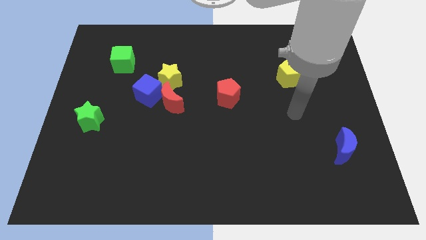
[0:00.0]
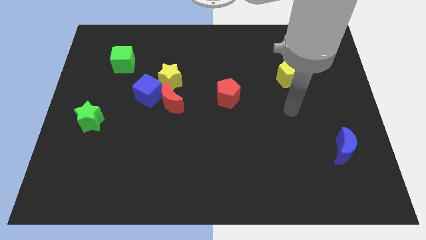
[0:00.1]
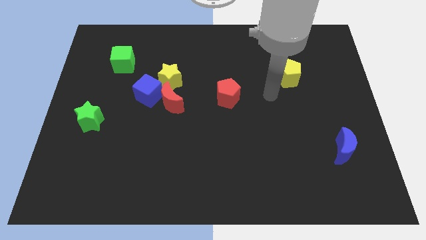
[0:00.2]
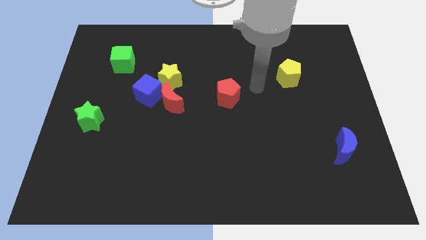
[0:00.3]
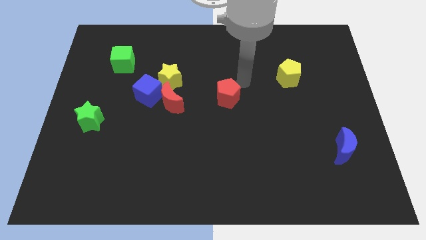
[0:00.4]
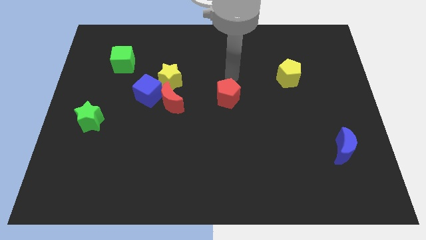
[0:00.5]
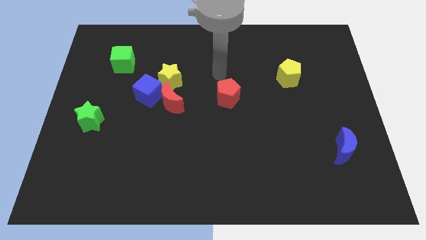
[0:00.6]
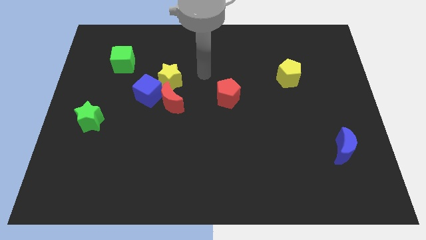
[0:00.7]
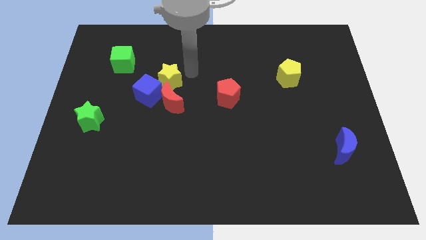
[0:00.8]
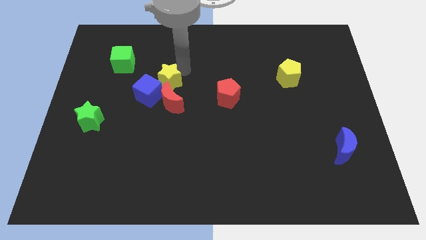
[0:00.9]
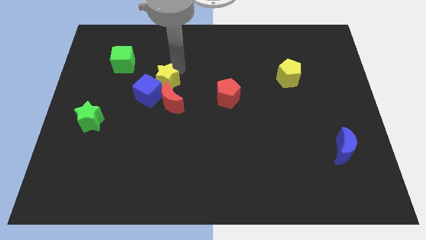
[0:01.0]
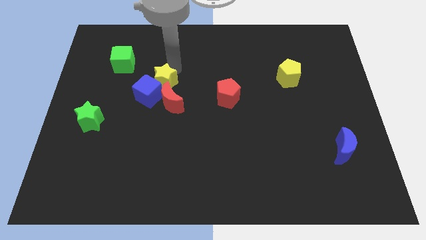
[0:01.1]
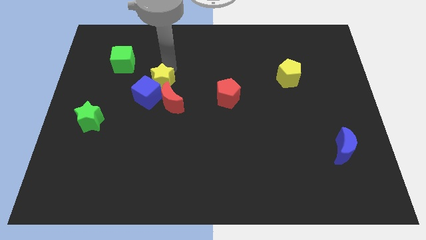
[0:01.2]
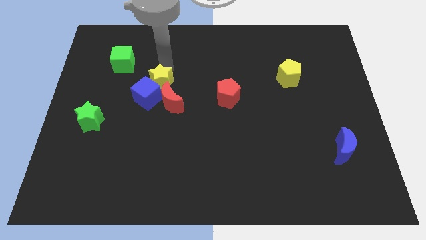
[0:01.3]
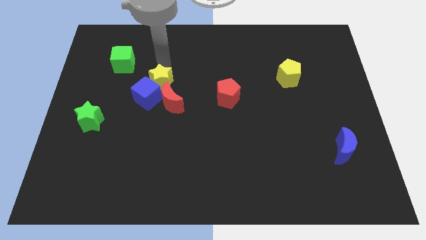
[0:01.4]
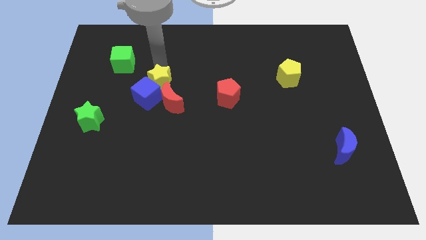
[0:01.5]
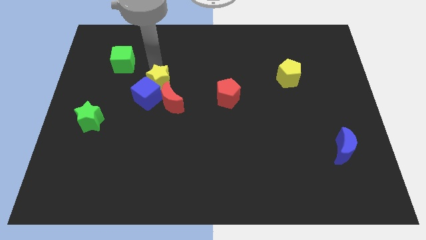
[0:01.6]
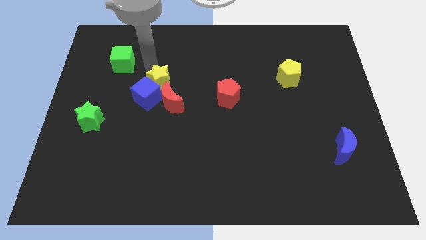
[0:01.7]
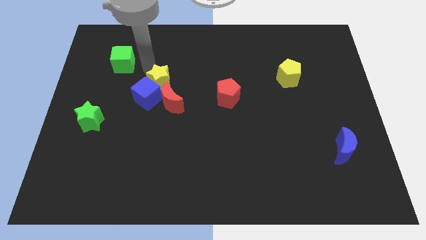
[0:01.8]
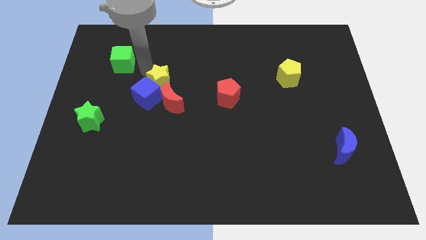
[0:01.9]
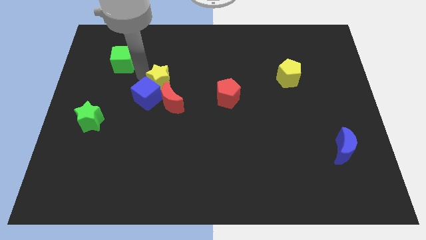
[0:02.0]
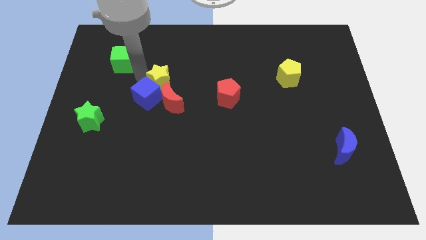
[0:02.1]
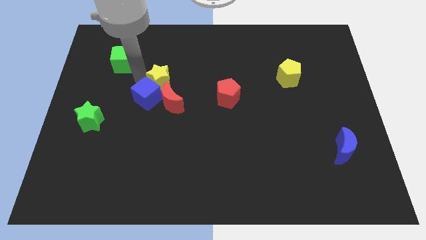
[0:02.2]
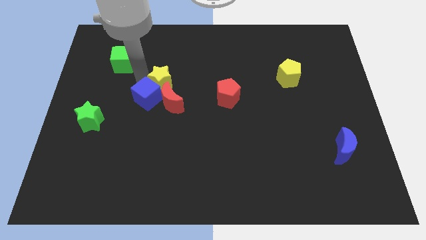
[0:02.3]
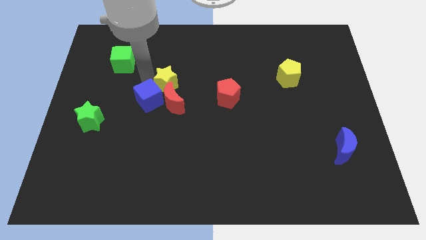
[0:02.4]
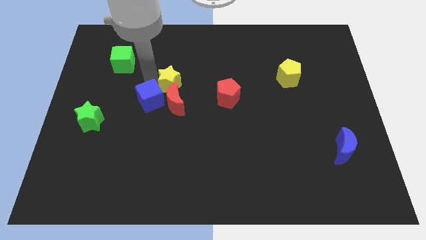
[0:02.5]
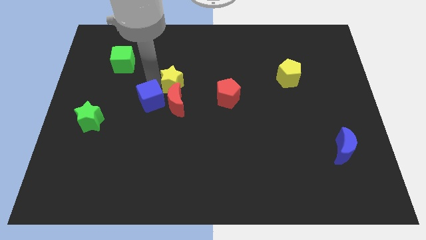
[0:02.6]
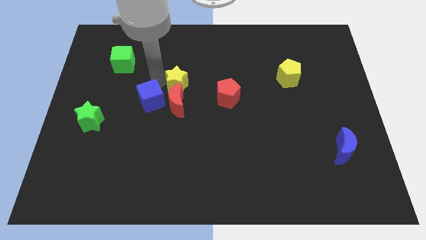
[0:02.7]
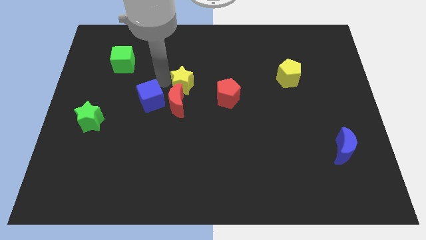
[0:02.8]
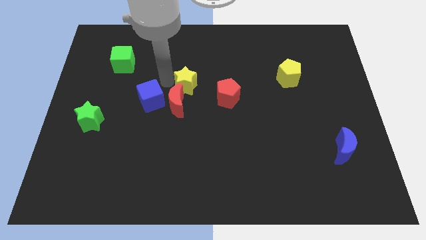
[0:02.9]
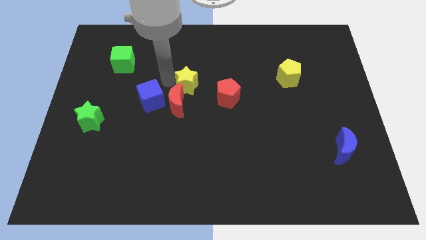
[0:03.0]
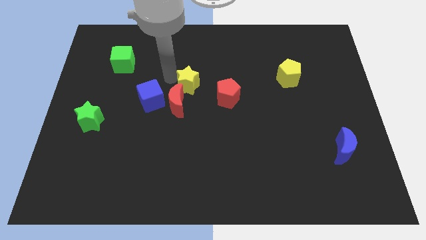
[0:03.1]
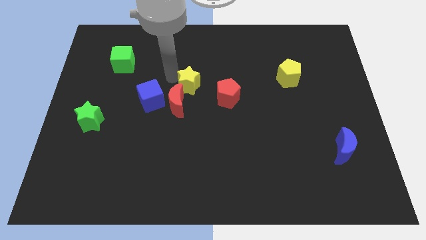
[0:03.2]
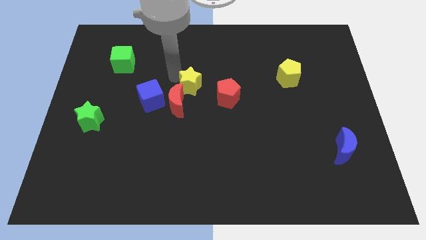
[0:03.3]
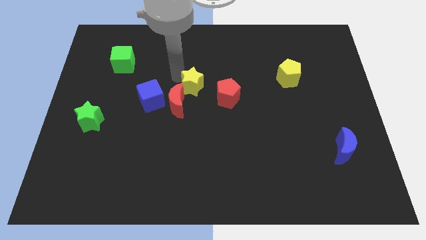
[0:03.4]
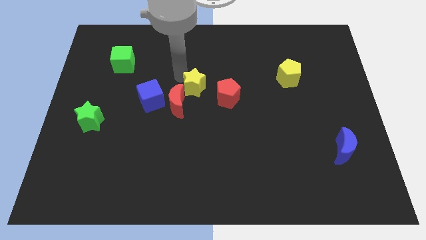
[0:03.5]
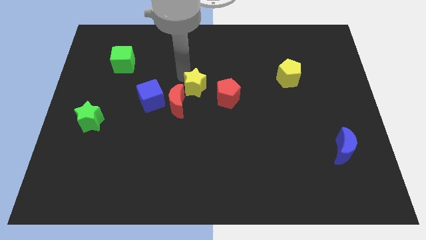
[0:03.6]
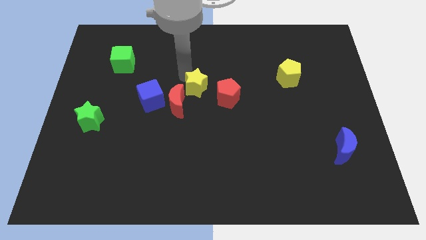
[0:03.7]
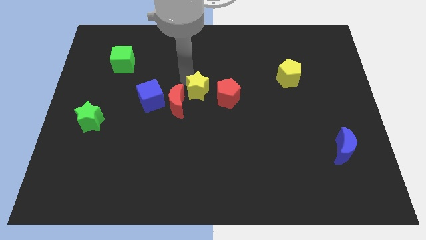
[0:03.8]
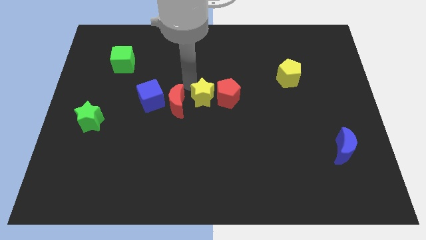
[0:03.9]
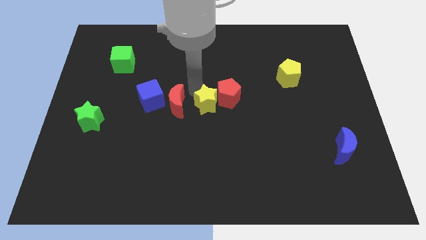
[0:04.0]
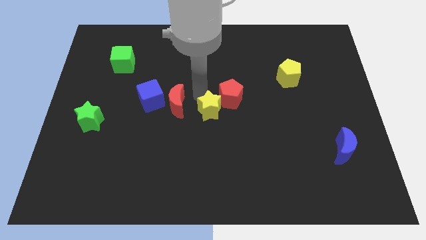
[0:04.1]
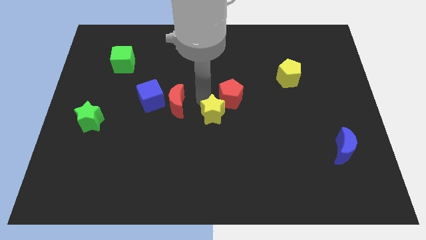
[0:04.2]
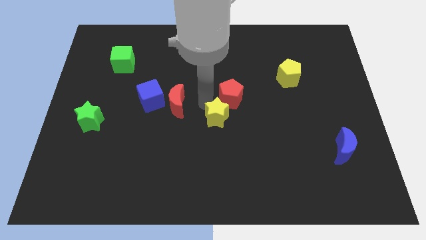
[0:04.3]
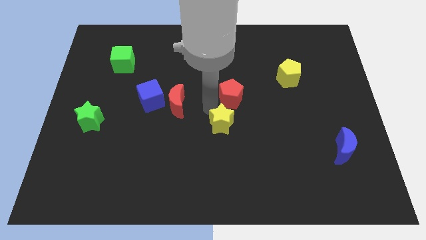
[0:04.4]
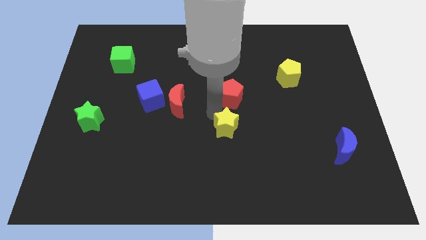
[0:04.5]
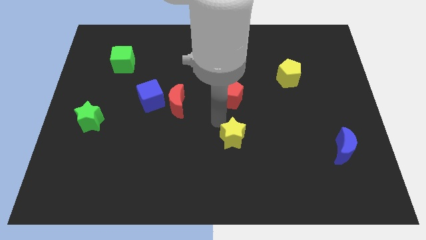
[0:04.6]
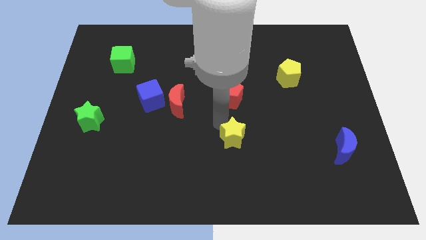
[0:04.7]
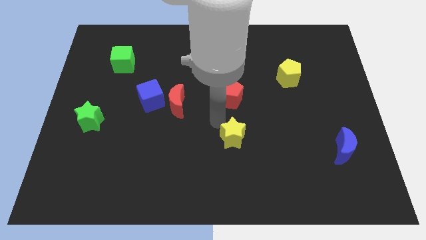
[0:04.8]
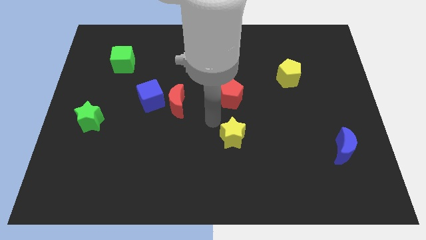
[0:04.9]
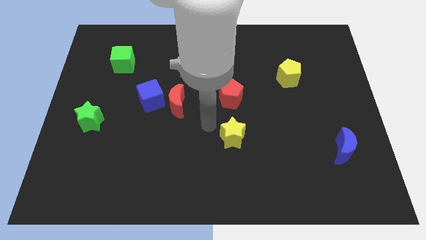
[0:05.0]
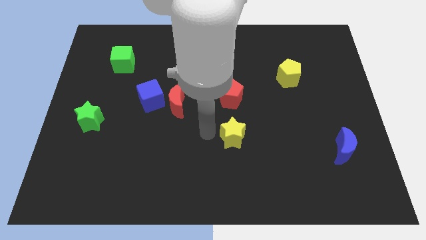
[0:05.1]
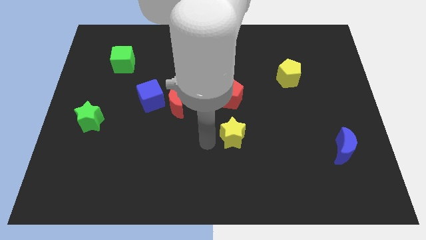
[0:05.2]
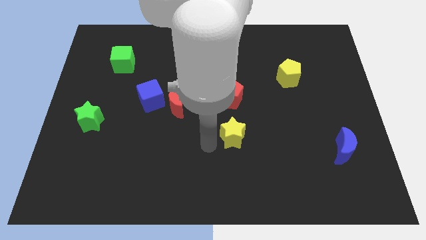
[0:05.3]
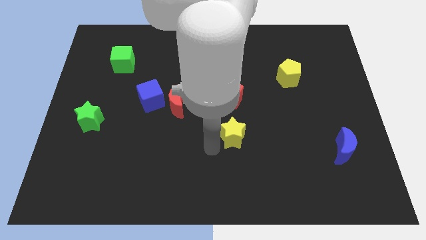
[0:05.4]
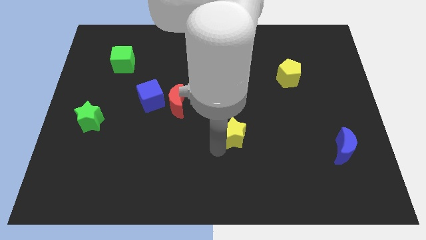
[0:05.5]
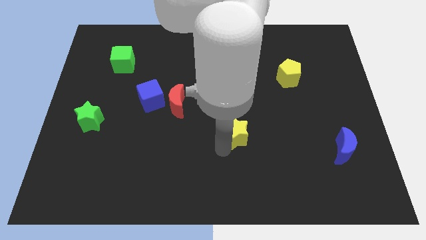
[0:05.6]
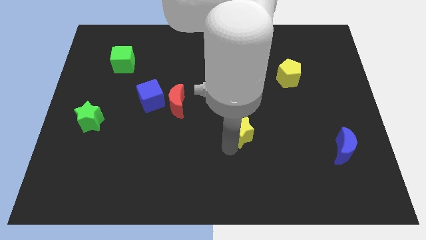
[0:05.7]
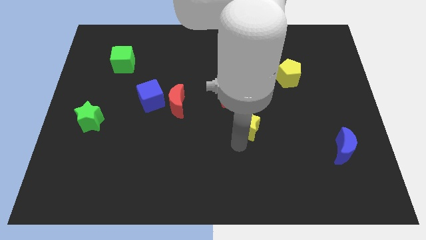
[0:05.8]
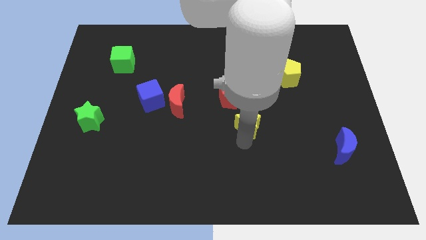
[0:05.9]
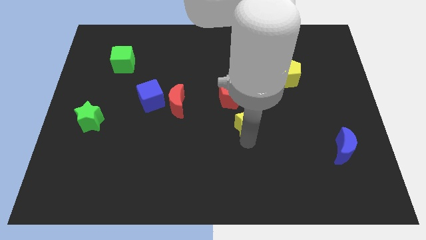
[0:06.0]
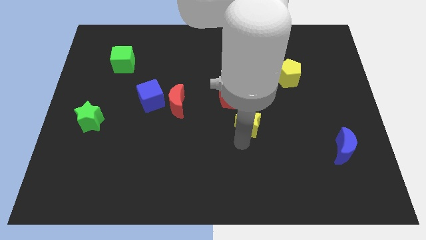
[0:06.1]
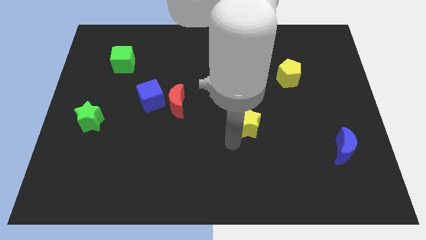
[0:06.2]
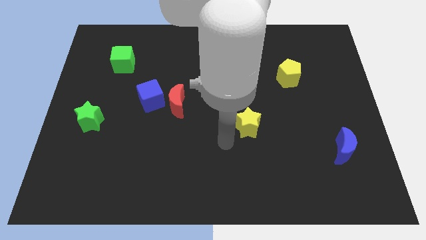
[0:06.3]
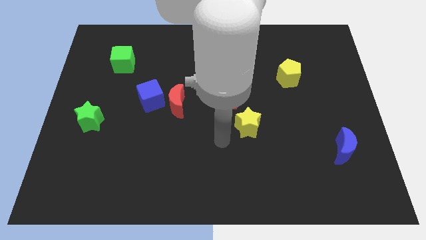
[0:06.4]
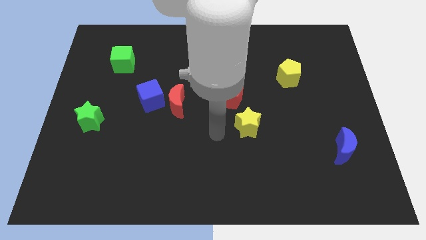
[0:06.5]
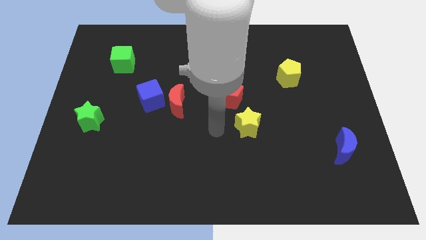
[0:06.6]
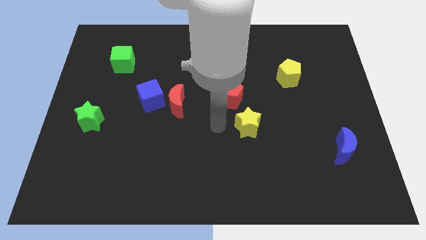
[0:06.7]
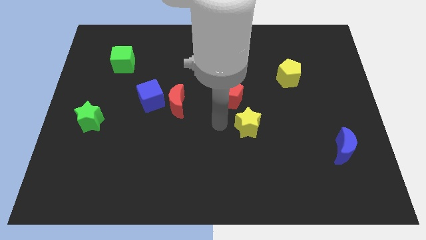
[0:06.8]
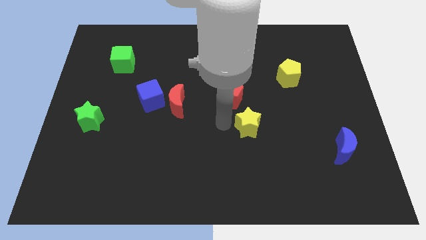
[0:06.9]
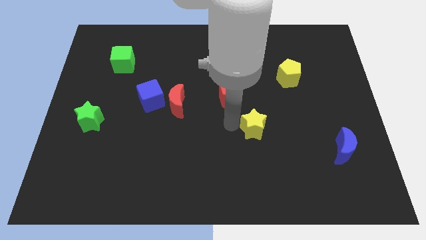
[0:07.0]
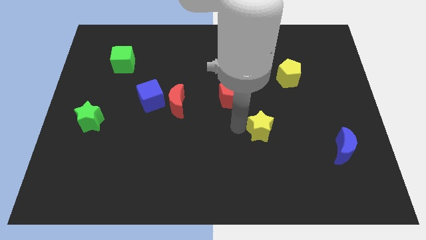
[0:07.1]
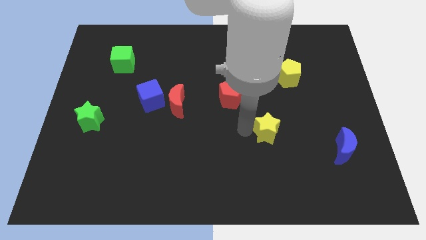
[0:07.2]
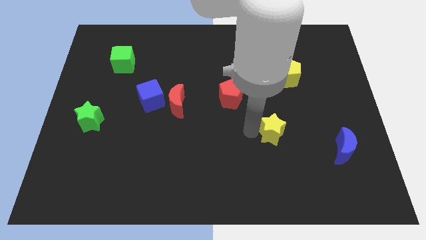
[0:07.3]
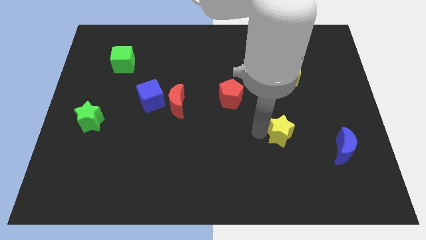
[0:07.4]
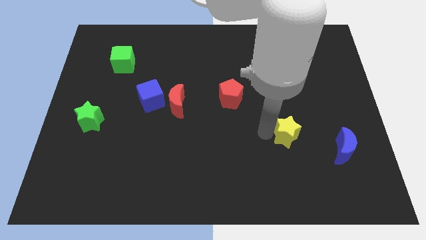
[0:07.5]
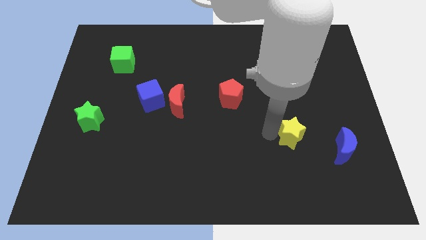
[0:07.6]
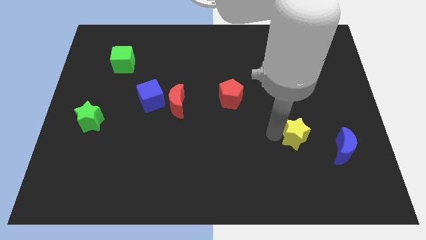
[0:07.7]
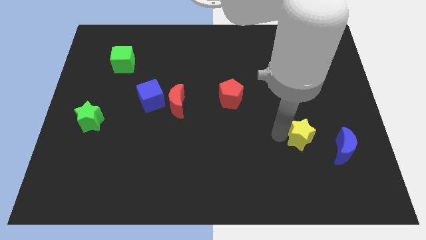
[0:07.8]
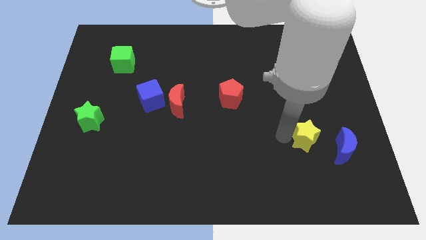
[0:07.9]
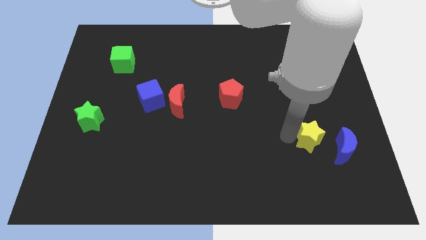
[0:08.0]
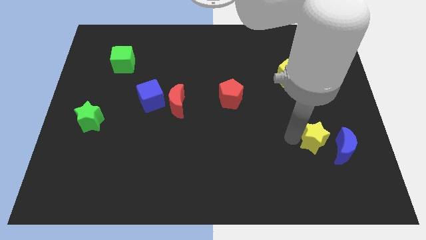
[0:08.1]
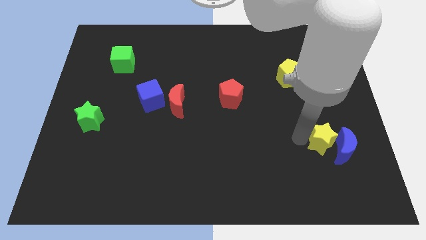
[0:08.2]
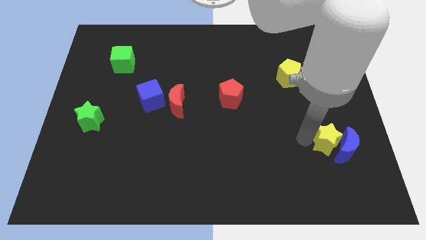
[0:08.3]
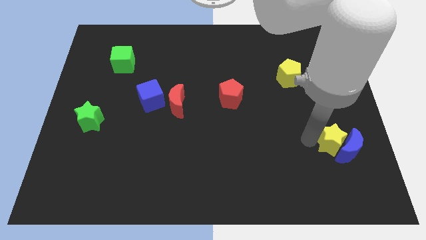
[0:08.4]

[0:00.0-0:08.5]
push the yellow star close to the blue moon

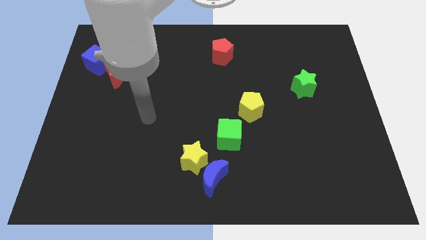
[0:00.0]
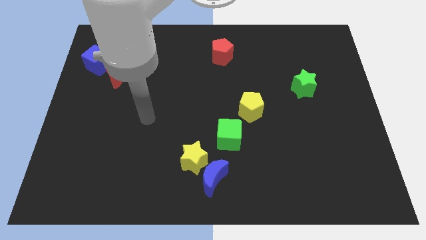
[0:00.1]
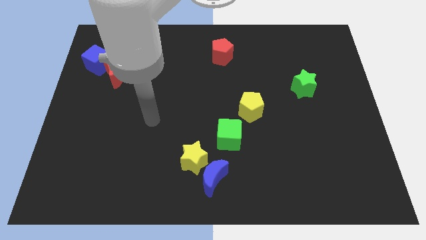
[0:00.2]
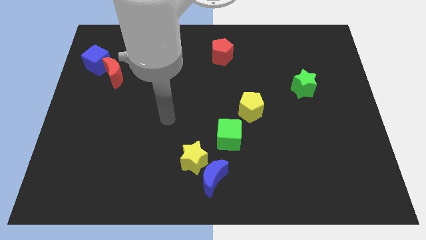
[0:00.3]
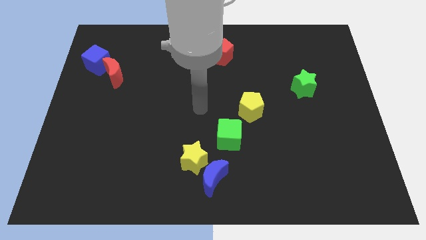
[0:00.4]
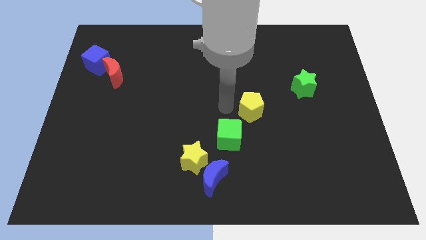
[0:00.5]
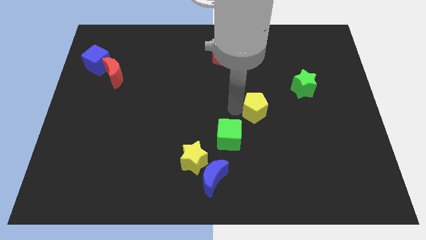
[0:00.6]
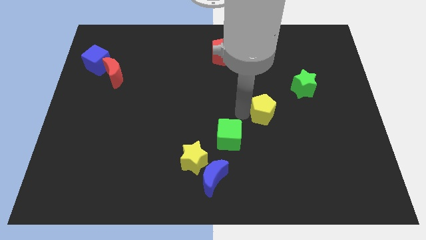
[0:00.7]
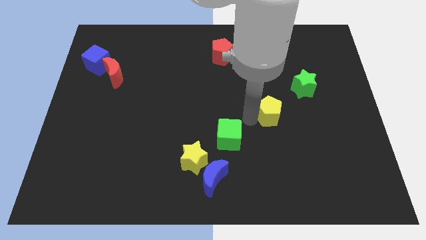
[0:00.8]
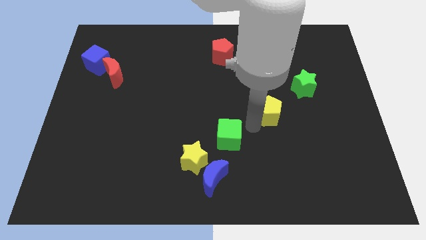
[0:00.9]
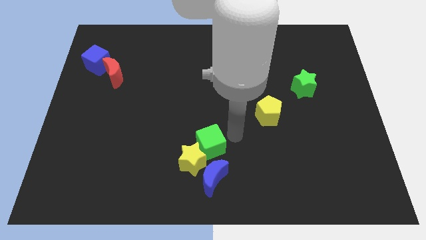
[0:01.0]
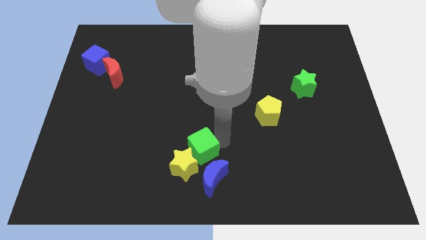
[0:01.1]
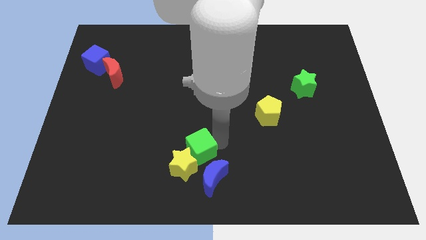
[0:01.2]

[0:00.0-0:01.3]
put the green cube close to the yellow star
